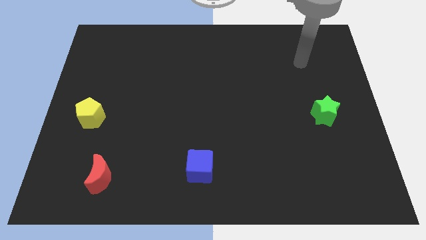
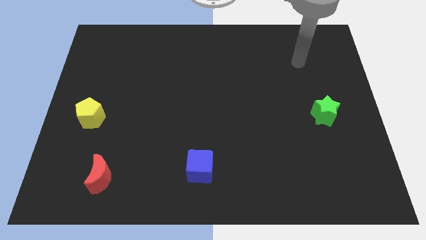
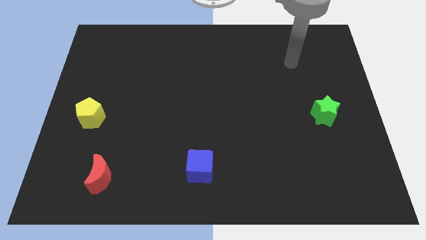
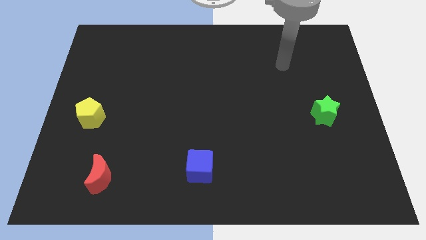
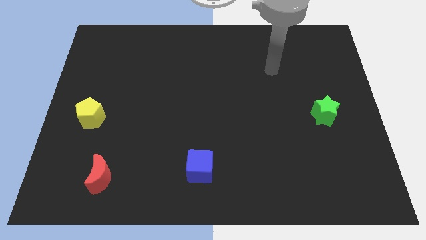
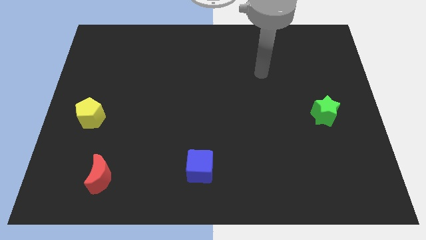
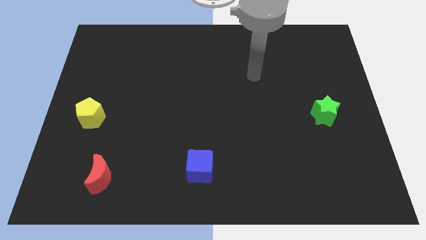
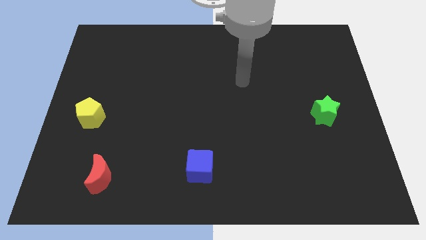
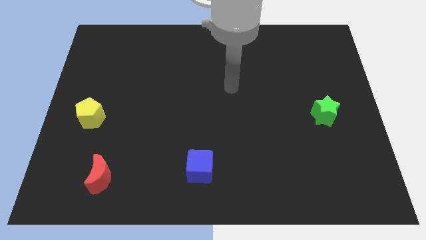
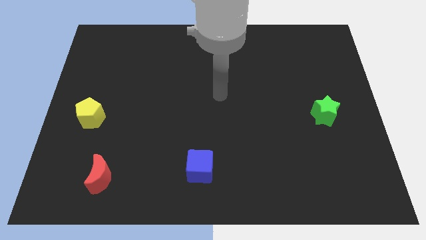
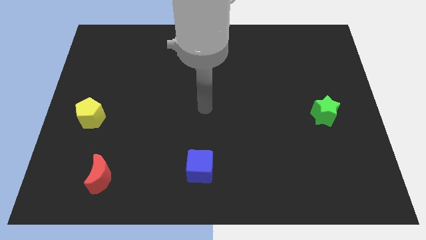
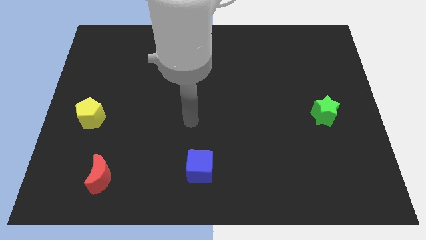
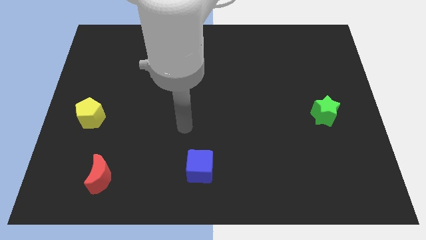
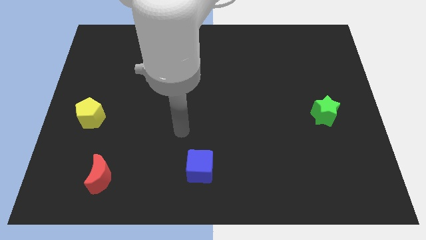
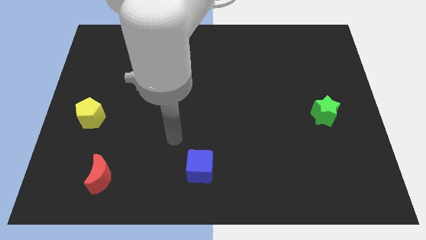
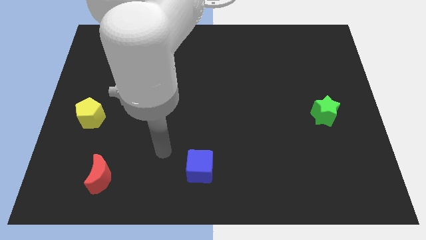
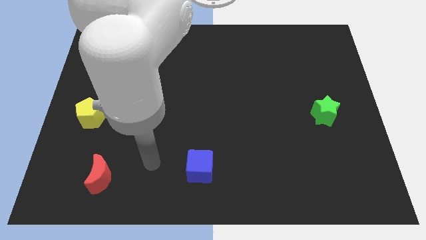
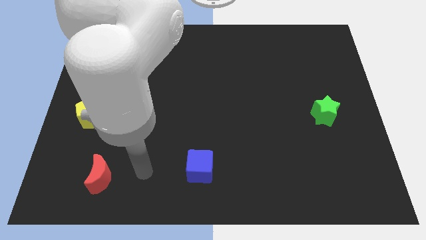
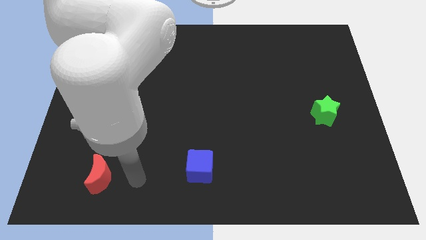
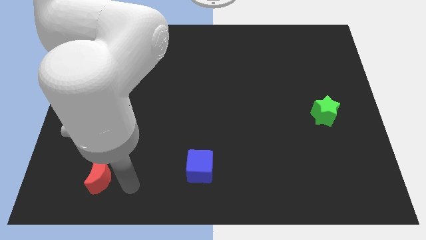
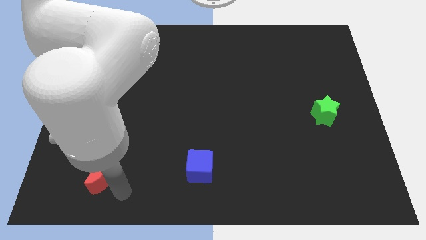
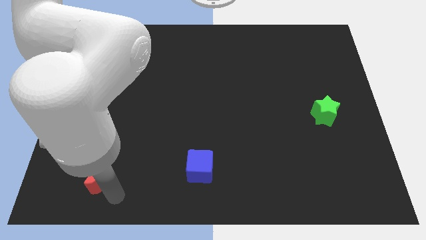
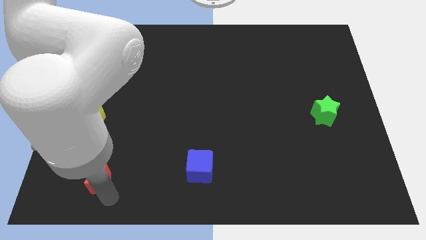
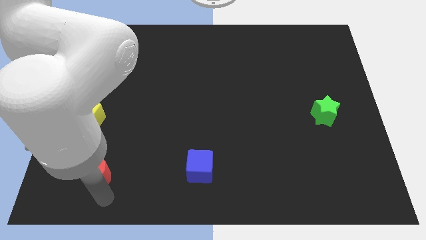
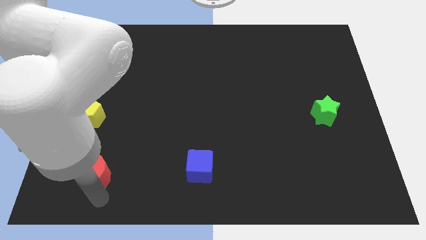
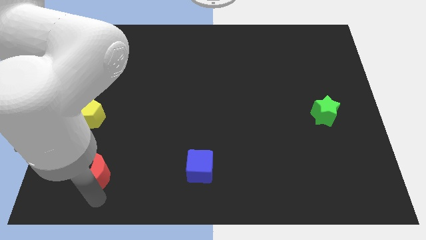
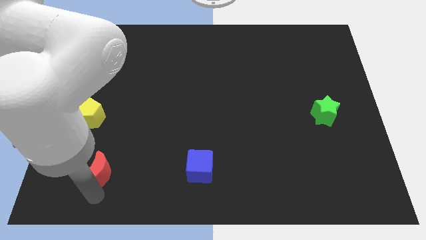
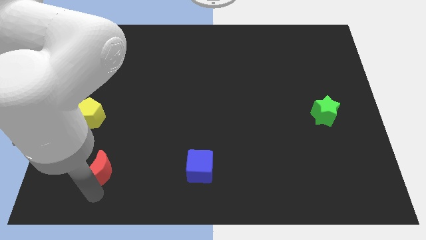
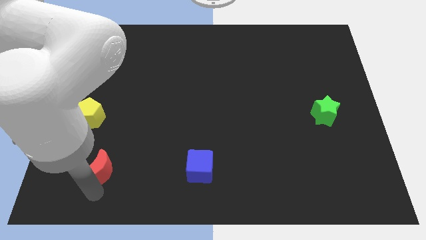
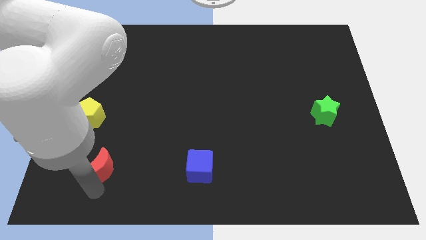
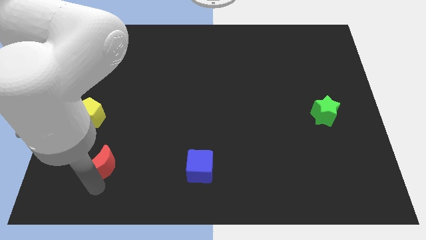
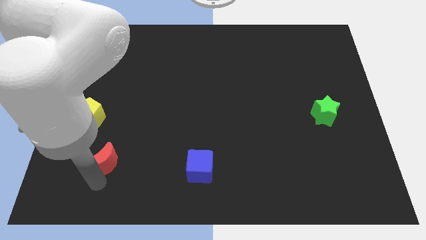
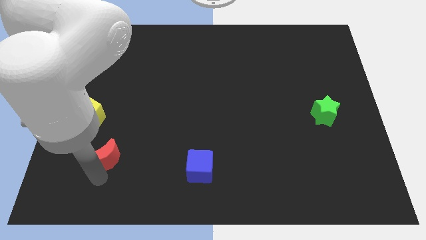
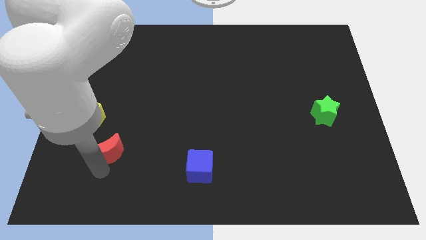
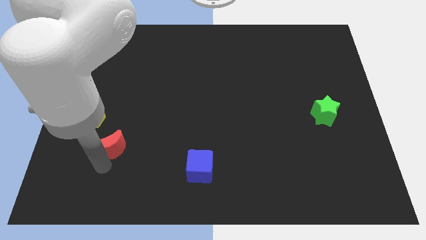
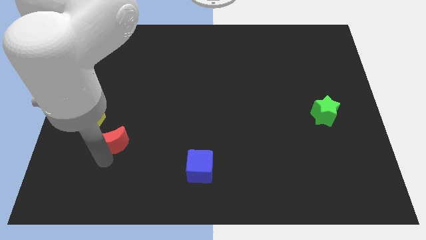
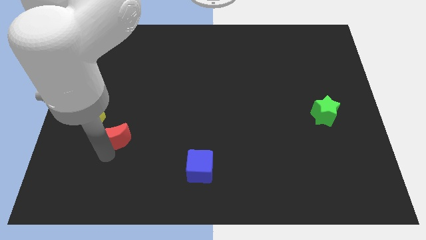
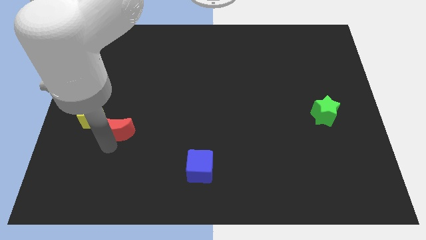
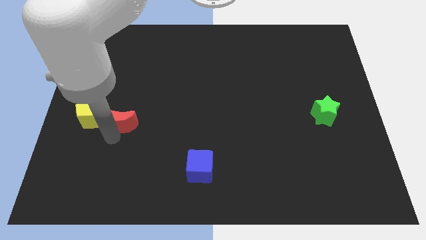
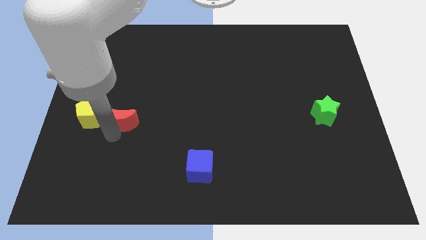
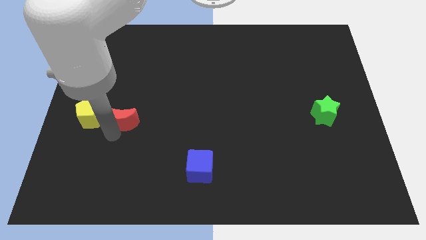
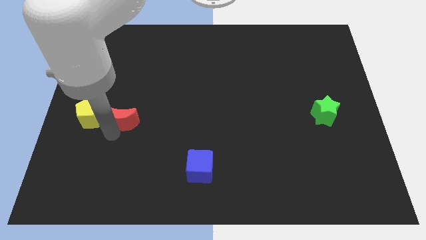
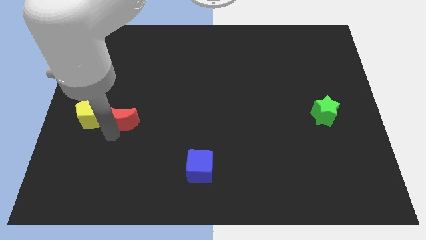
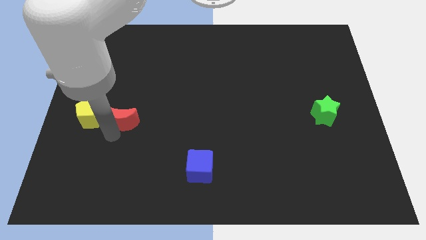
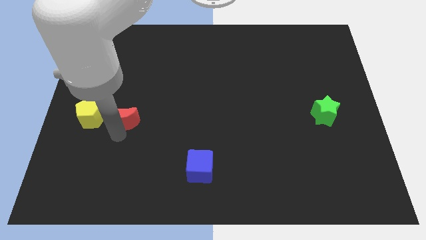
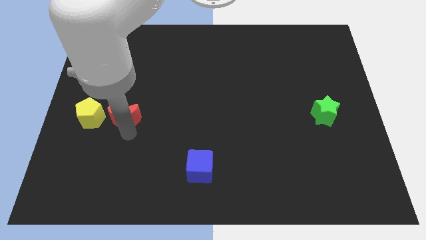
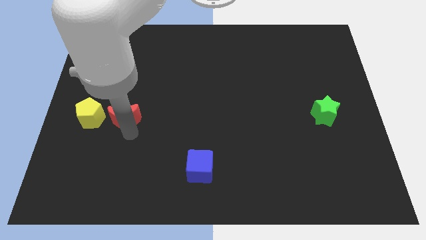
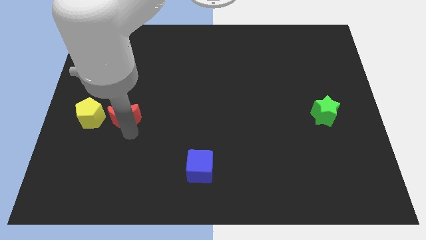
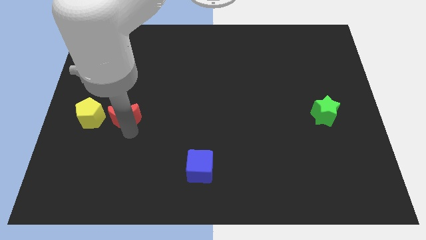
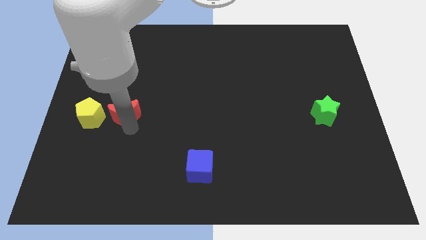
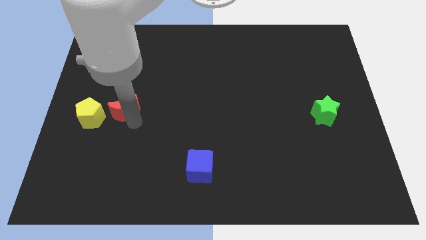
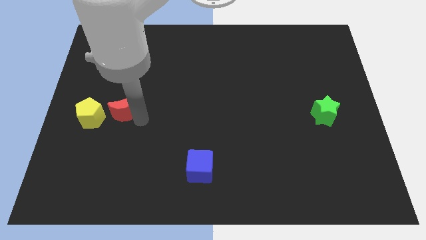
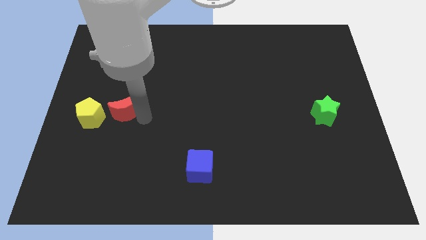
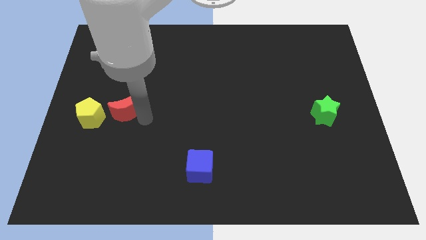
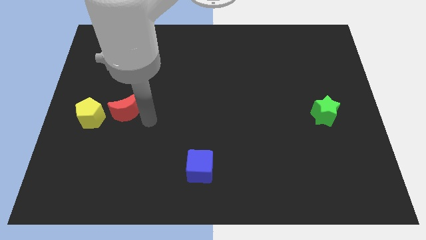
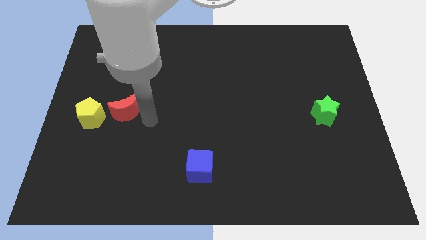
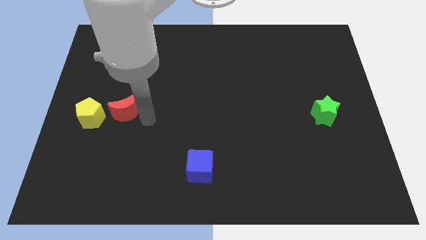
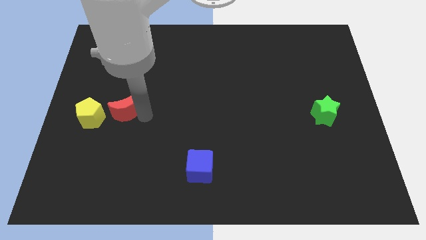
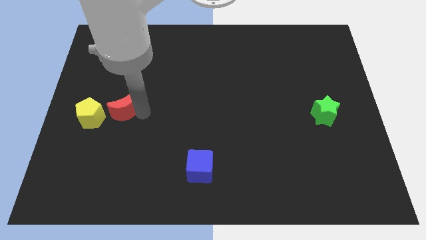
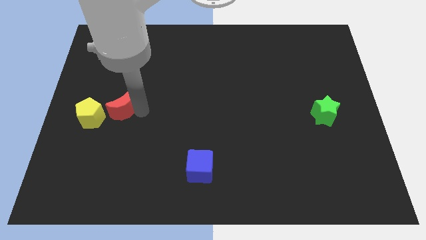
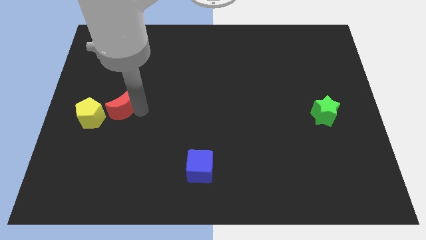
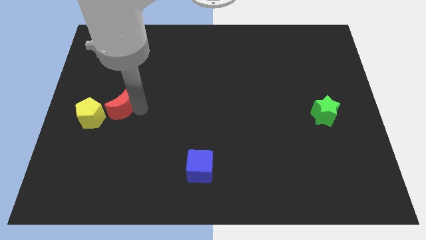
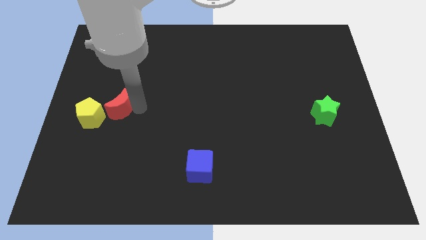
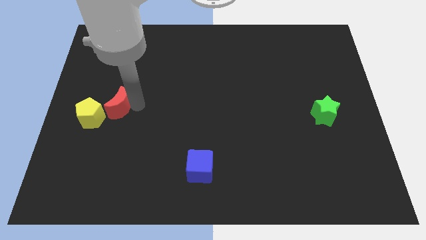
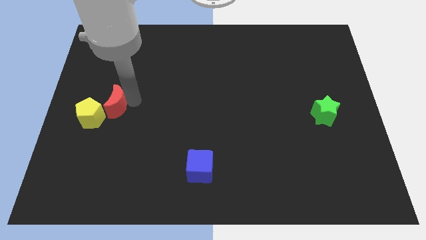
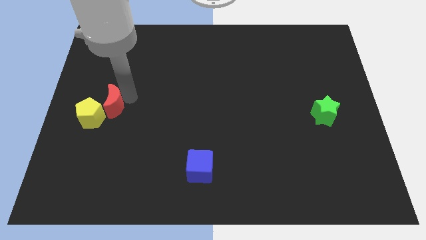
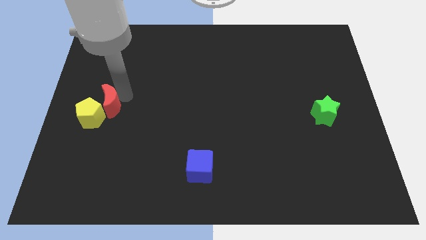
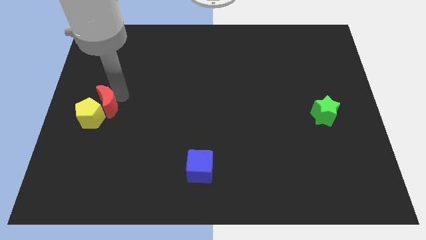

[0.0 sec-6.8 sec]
move the red moon towards the yellow pentagon

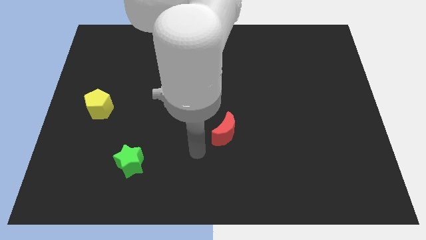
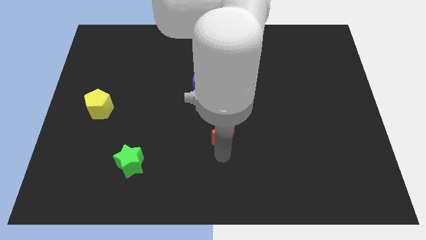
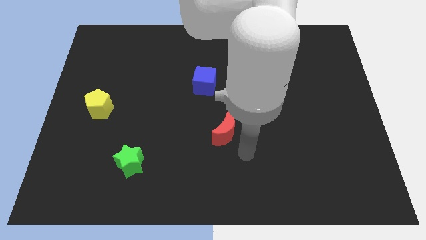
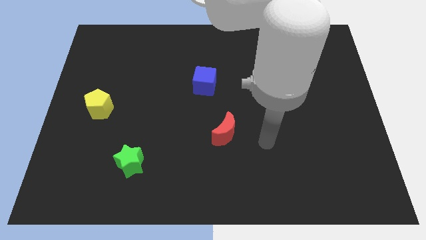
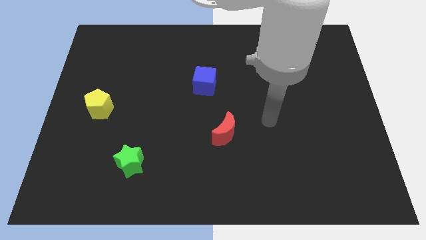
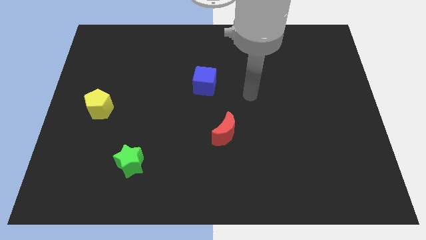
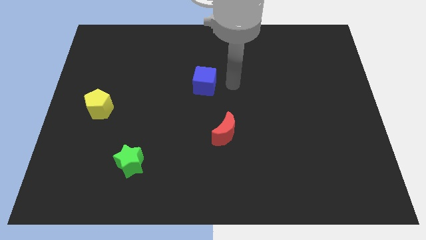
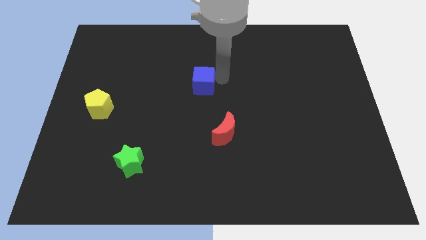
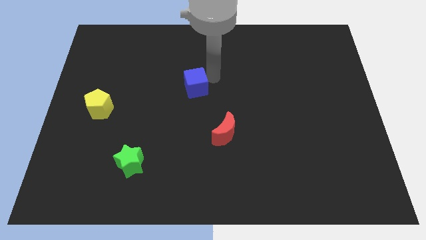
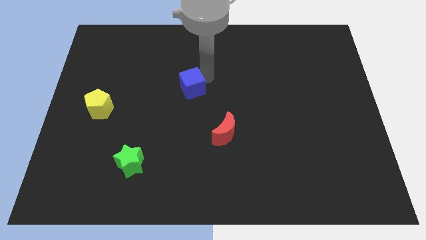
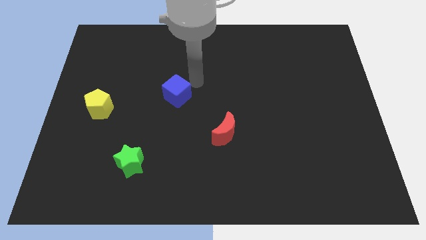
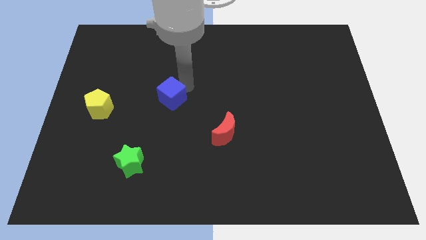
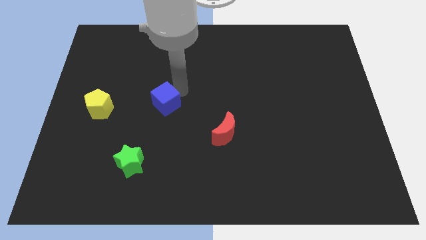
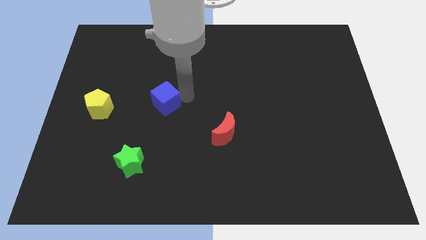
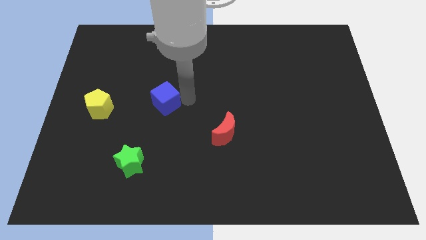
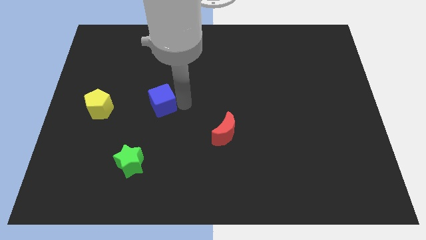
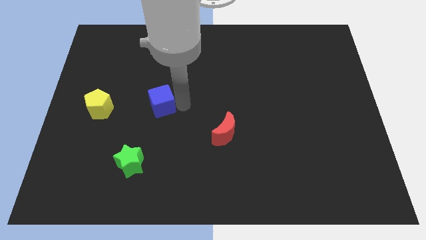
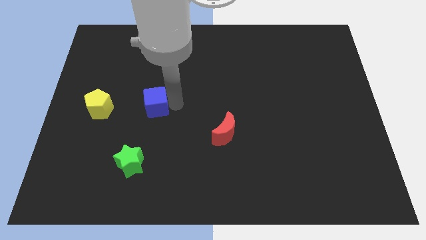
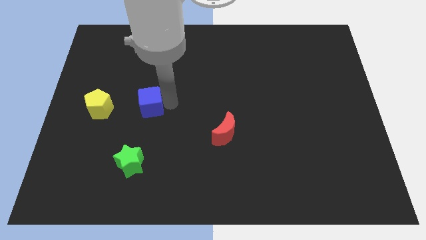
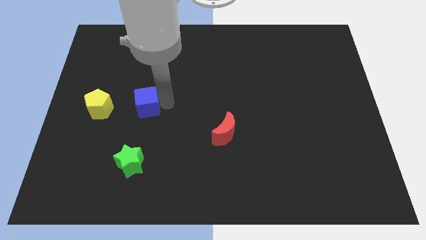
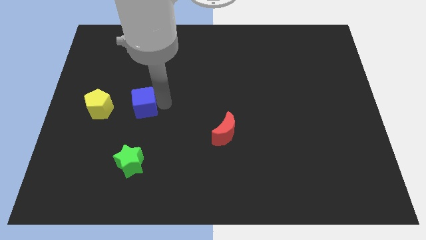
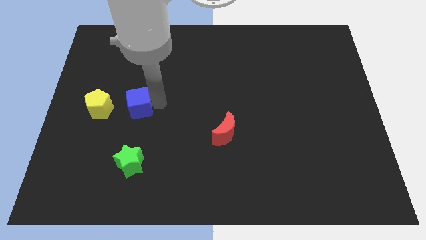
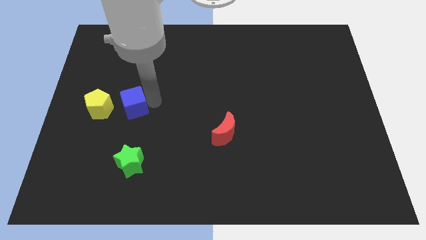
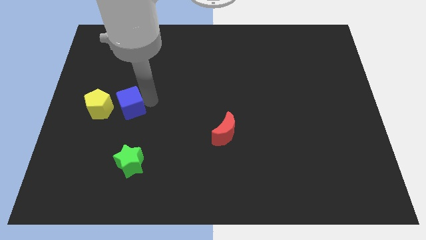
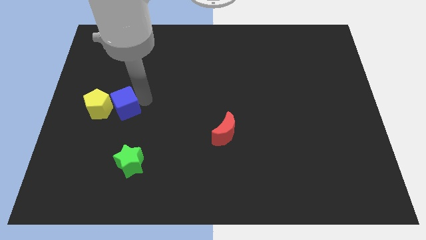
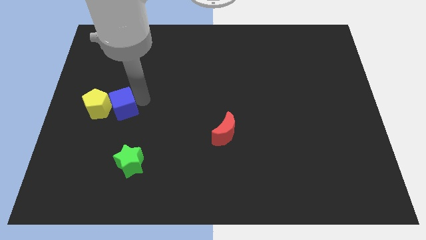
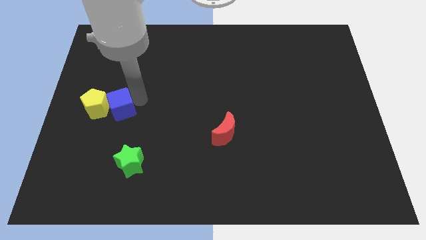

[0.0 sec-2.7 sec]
move the blue cube to the pentagon
